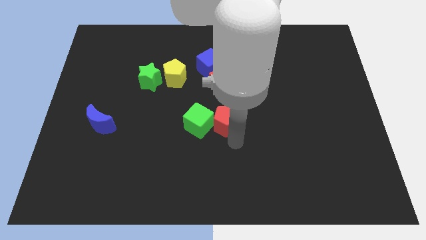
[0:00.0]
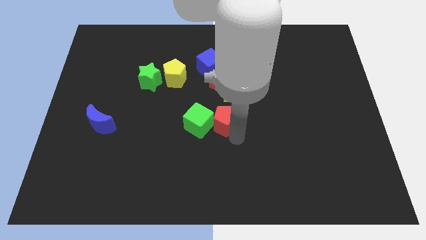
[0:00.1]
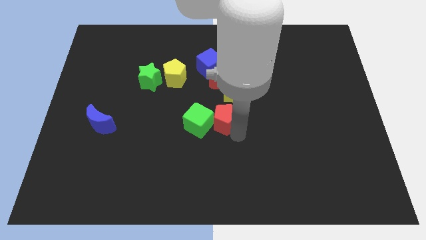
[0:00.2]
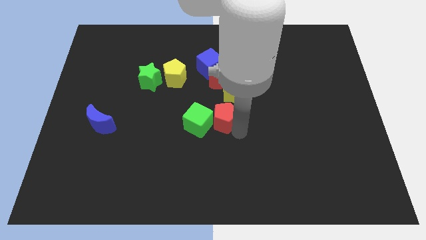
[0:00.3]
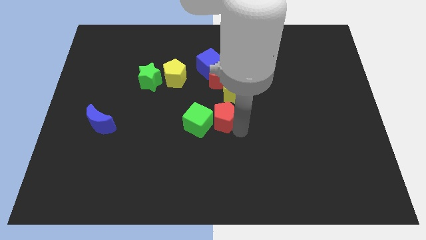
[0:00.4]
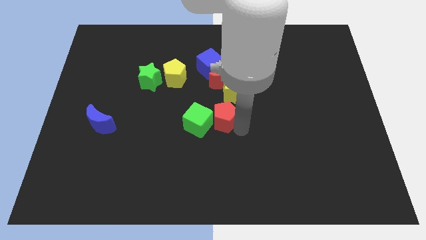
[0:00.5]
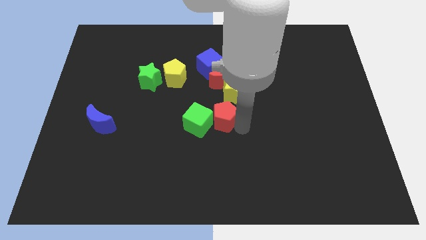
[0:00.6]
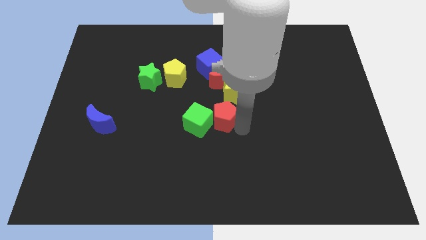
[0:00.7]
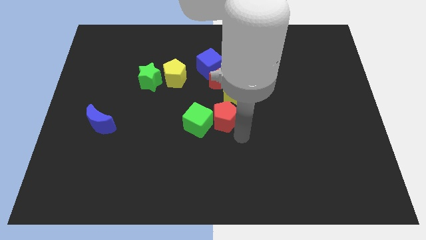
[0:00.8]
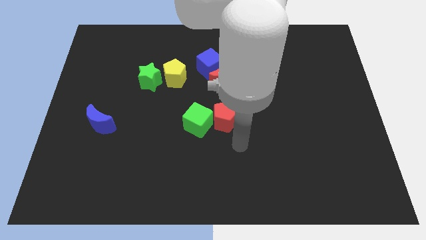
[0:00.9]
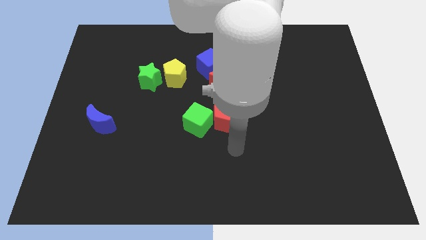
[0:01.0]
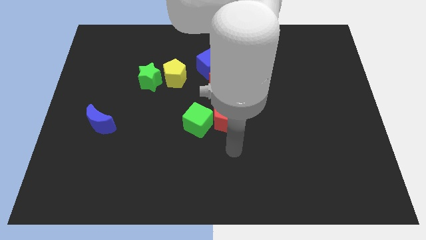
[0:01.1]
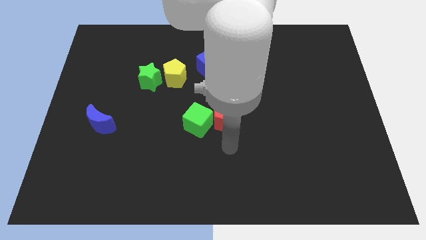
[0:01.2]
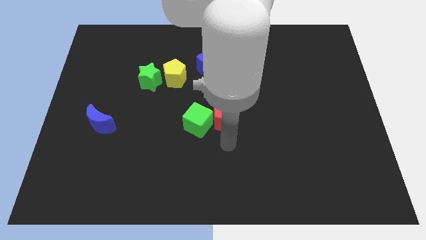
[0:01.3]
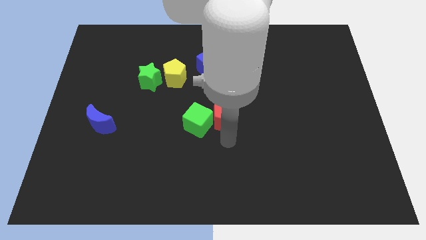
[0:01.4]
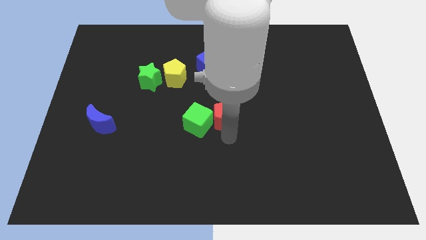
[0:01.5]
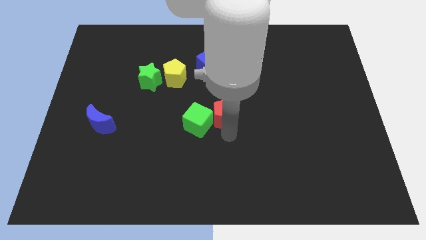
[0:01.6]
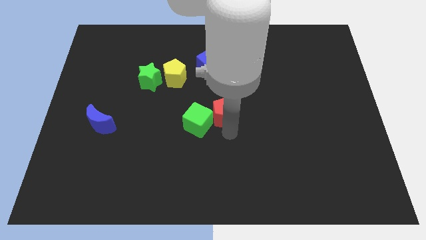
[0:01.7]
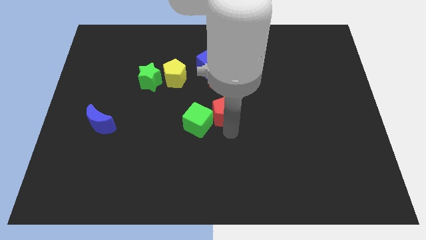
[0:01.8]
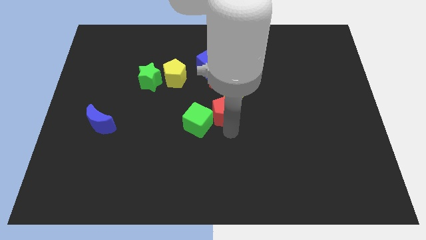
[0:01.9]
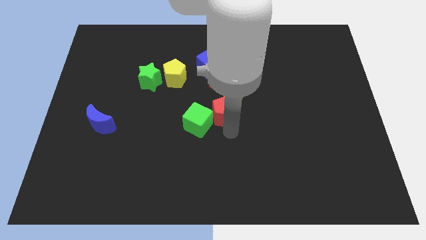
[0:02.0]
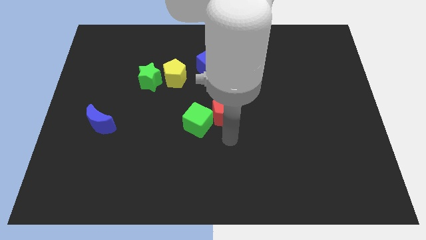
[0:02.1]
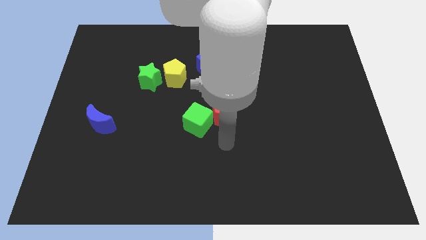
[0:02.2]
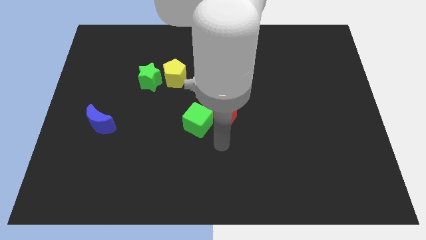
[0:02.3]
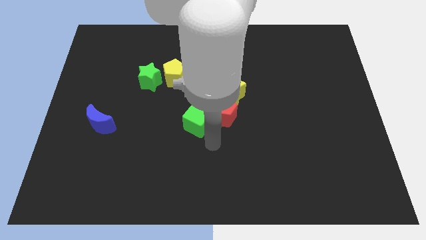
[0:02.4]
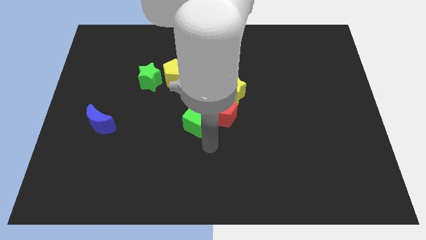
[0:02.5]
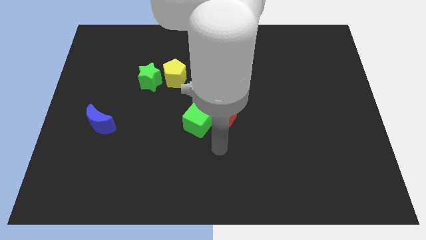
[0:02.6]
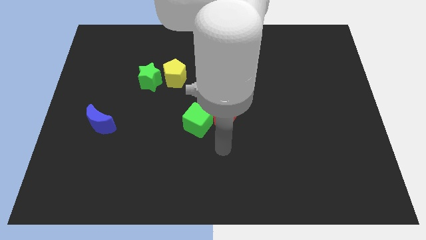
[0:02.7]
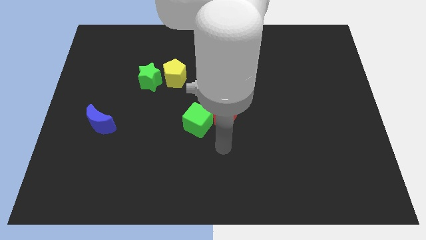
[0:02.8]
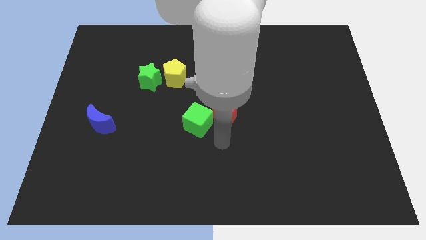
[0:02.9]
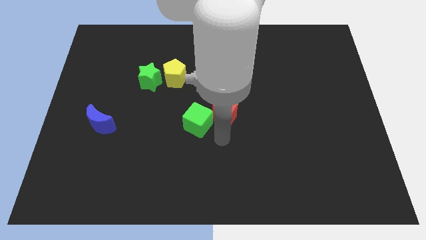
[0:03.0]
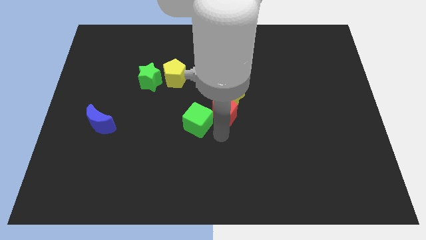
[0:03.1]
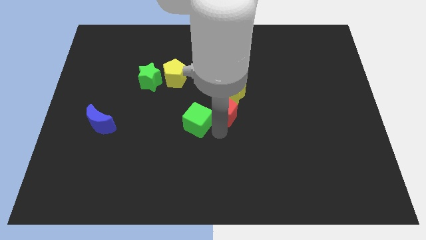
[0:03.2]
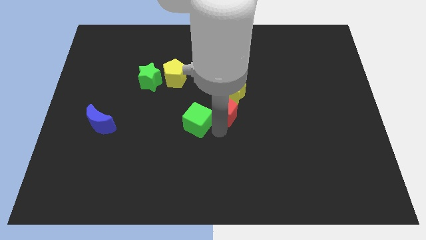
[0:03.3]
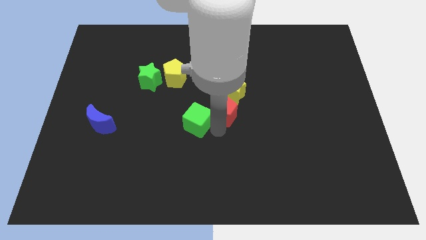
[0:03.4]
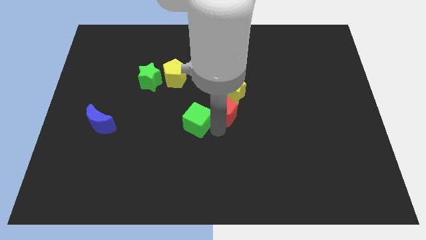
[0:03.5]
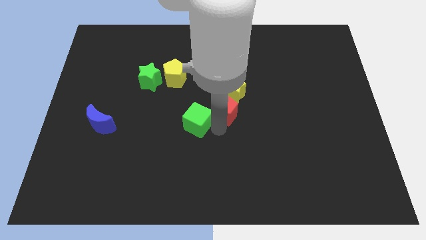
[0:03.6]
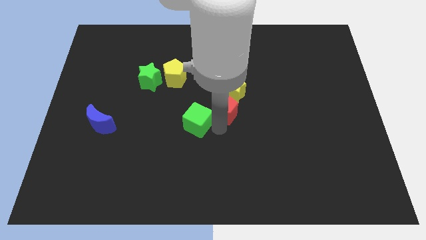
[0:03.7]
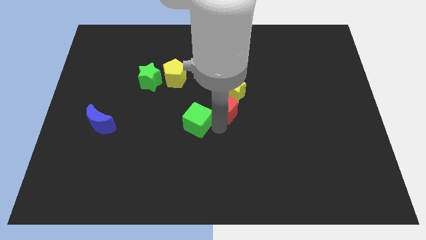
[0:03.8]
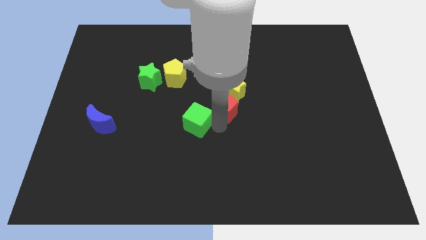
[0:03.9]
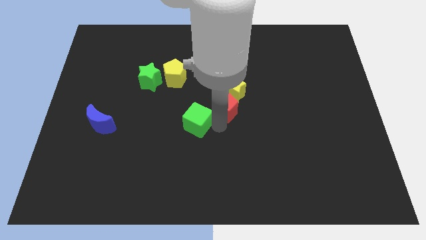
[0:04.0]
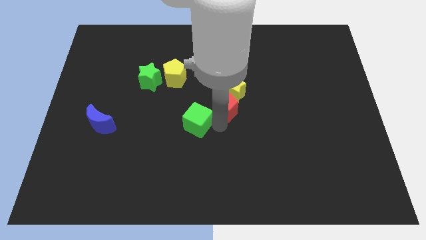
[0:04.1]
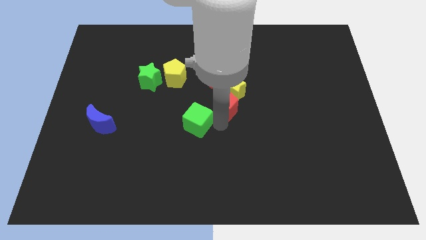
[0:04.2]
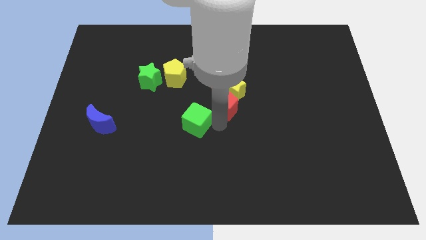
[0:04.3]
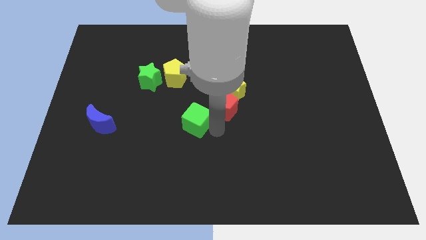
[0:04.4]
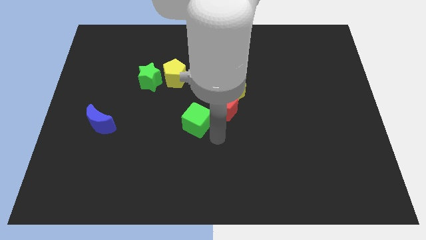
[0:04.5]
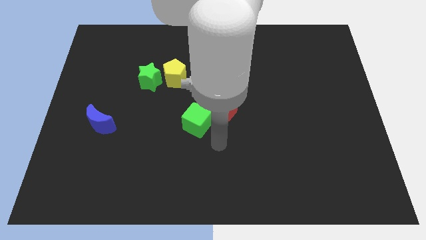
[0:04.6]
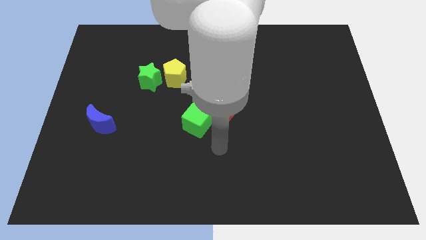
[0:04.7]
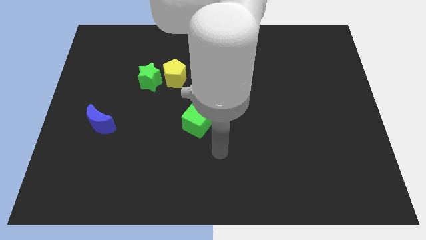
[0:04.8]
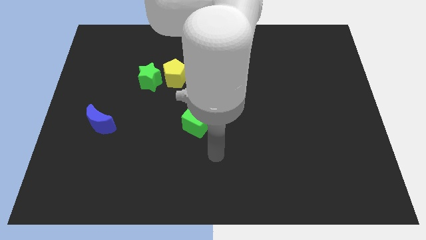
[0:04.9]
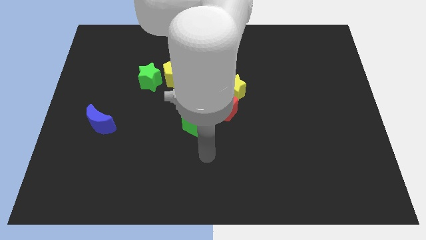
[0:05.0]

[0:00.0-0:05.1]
place red pentagon between yellow star and green cube

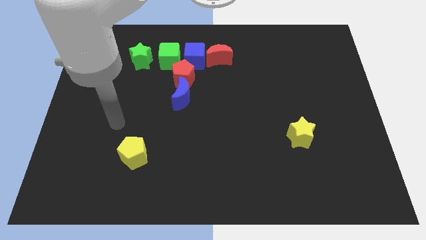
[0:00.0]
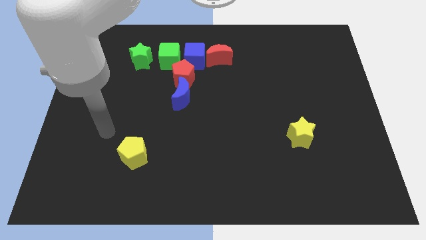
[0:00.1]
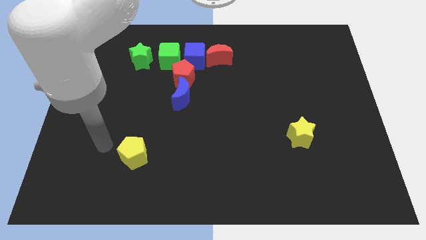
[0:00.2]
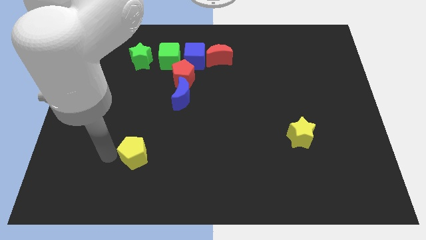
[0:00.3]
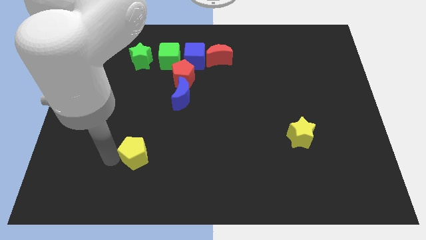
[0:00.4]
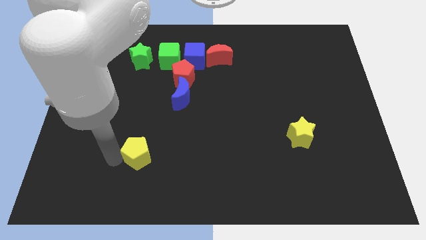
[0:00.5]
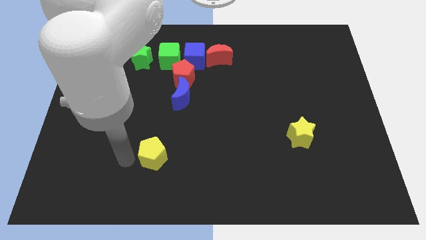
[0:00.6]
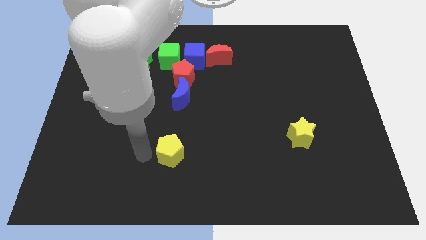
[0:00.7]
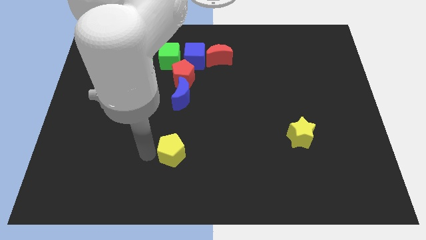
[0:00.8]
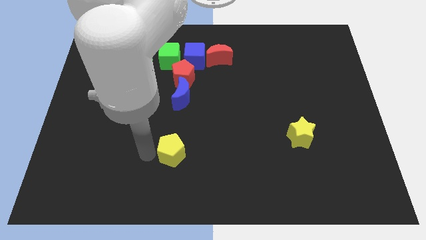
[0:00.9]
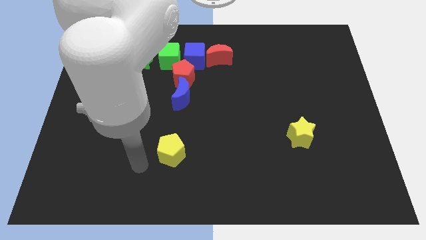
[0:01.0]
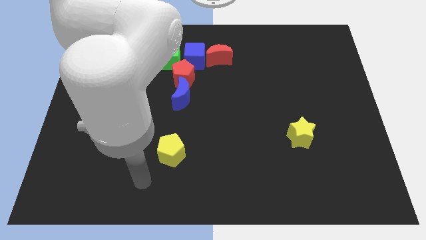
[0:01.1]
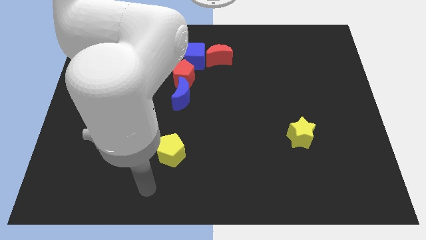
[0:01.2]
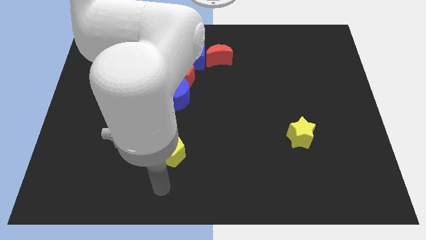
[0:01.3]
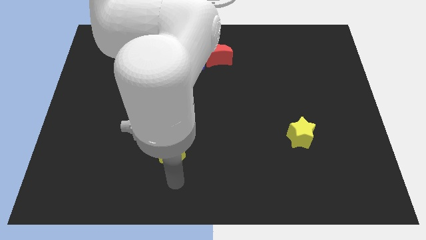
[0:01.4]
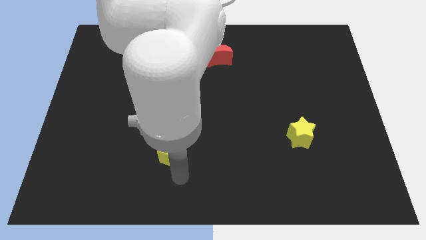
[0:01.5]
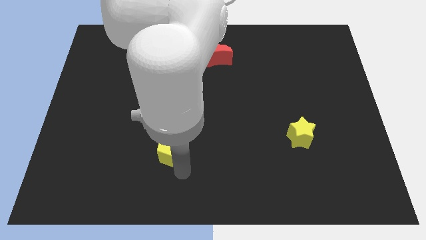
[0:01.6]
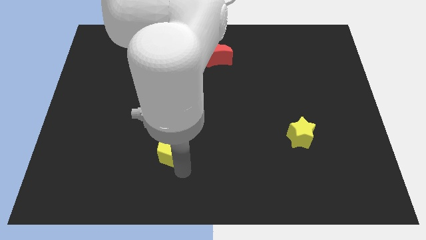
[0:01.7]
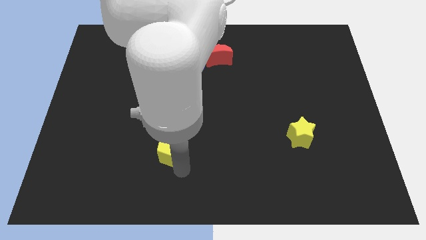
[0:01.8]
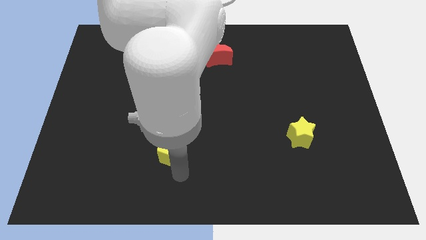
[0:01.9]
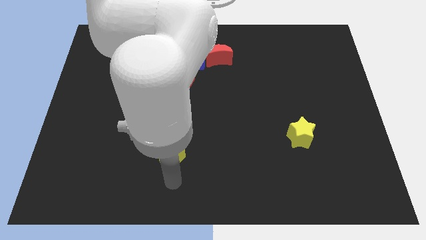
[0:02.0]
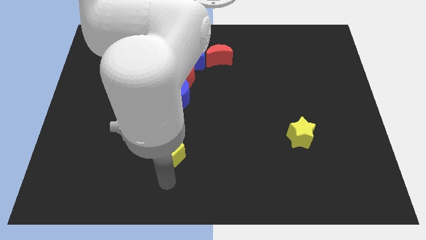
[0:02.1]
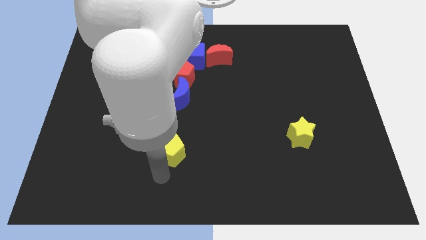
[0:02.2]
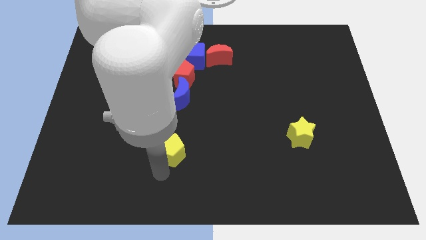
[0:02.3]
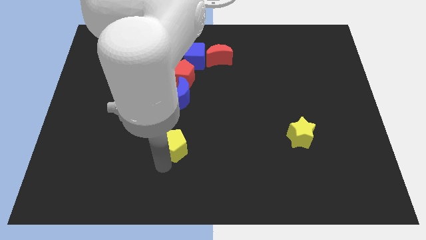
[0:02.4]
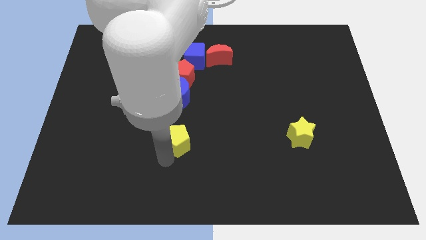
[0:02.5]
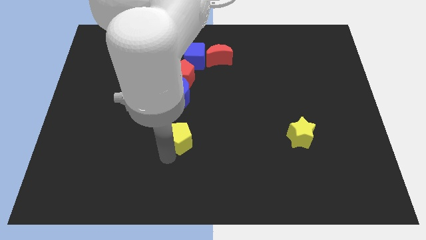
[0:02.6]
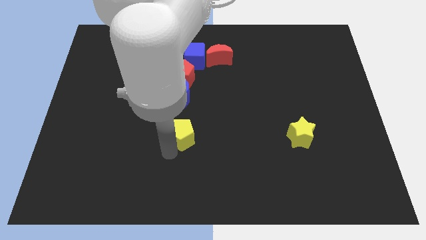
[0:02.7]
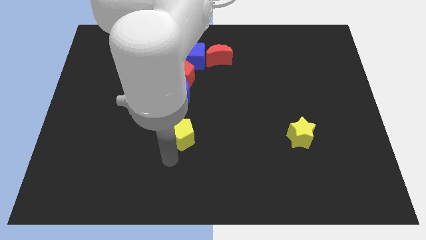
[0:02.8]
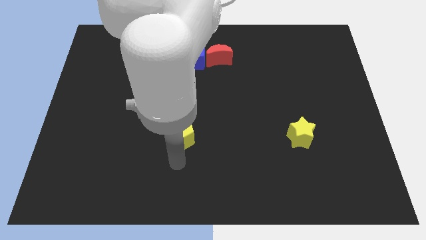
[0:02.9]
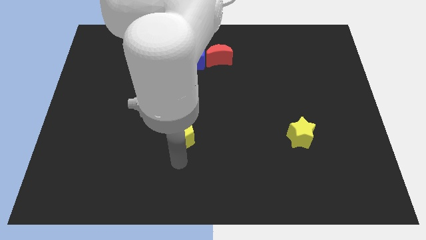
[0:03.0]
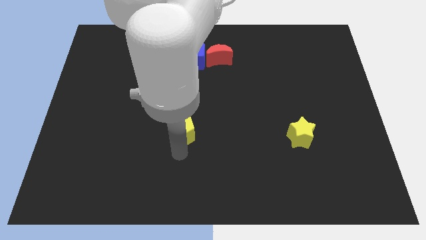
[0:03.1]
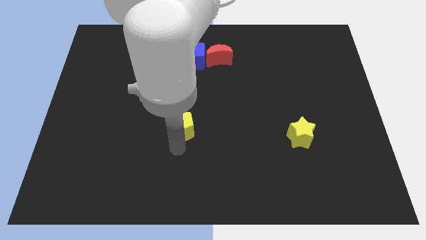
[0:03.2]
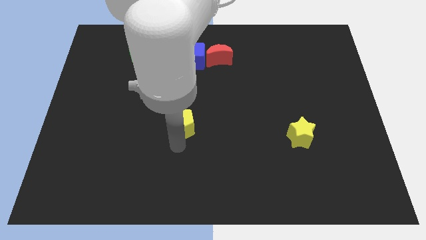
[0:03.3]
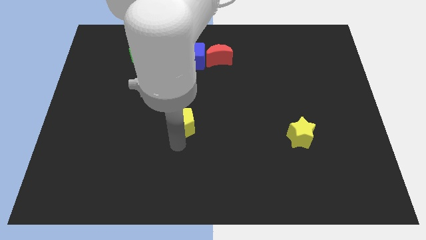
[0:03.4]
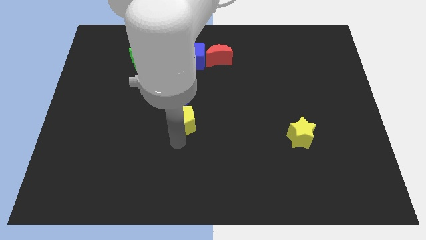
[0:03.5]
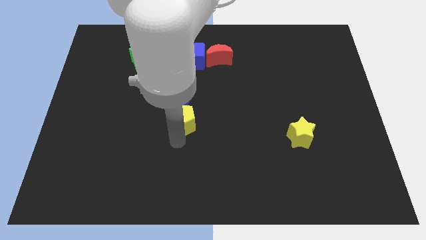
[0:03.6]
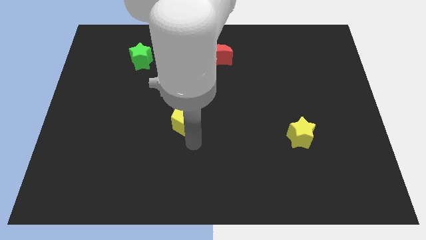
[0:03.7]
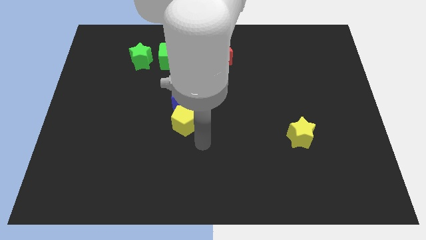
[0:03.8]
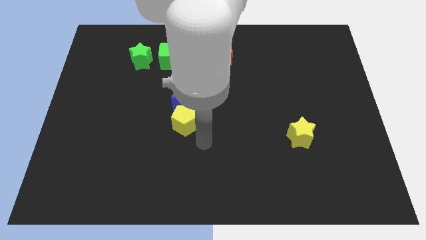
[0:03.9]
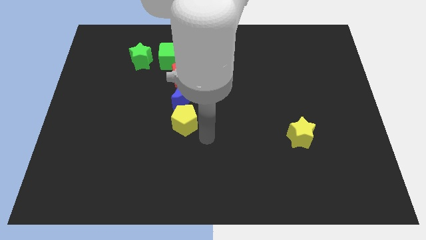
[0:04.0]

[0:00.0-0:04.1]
move the yellow pentagon to the bottom of the blue moon
